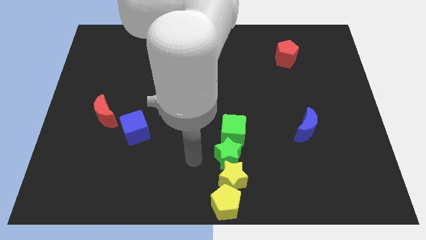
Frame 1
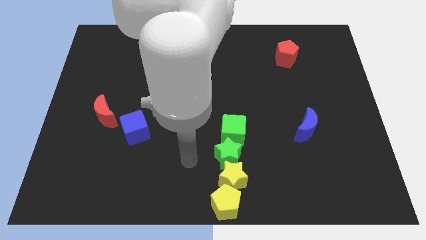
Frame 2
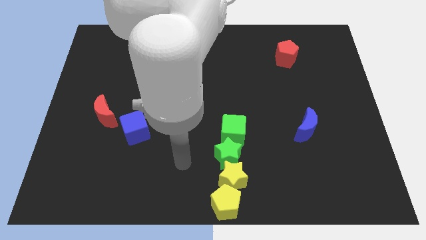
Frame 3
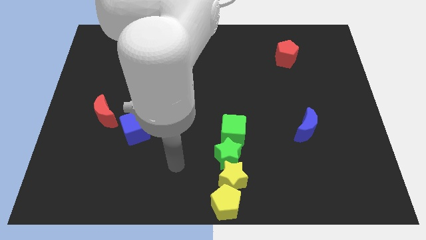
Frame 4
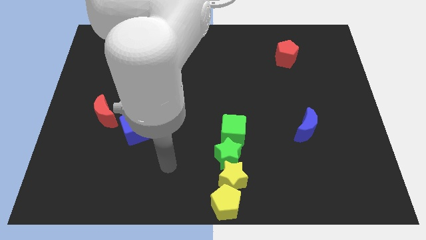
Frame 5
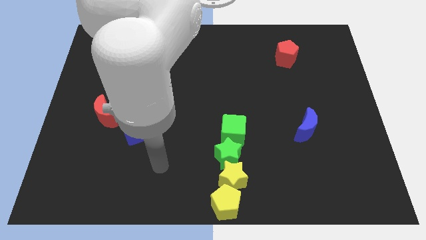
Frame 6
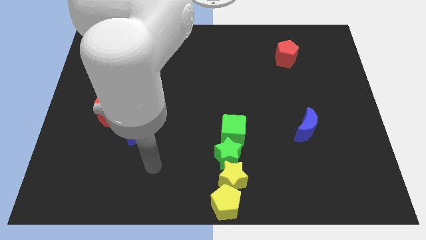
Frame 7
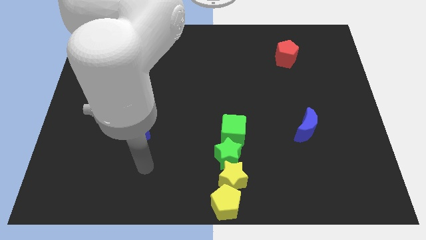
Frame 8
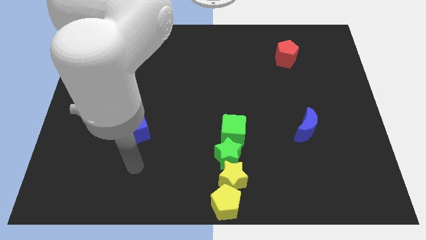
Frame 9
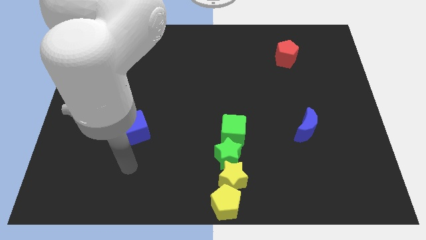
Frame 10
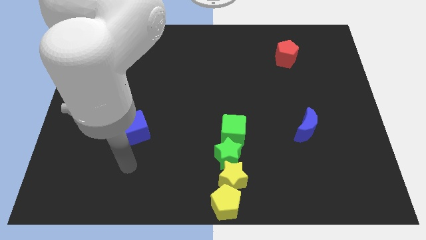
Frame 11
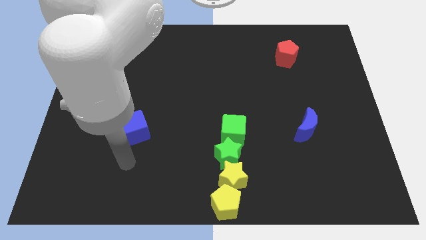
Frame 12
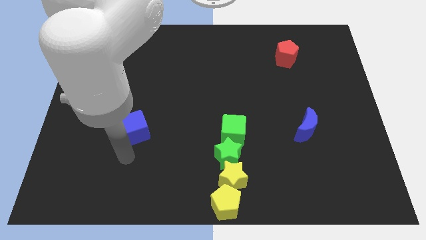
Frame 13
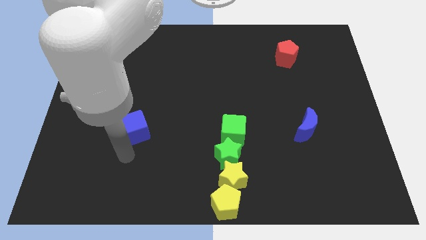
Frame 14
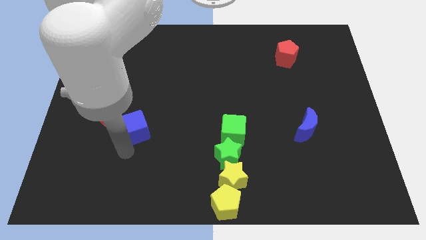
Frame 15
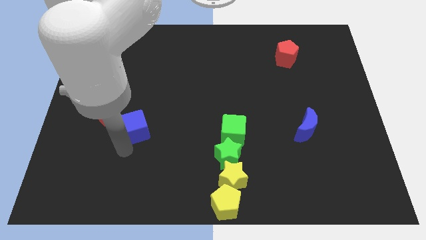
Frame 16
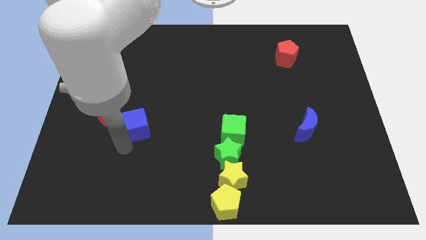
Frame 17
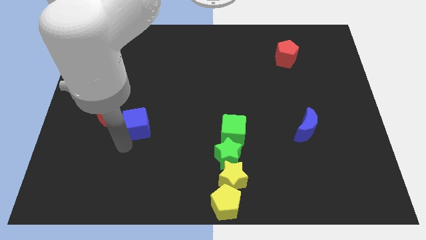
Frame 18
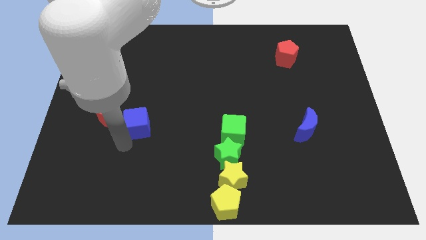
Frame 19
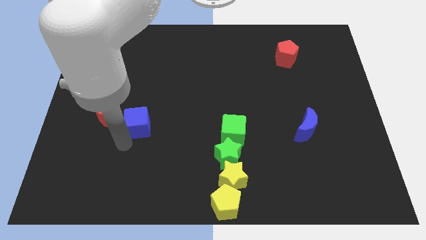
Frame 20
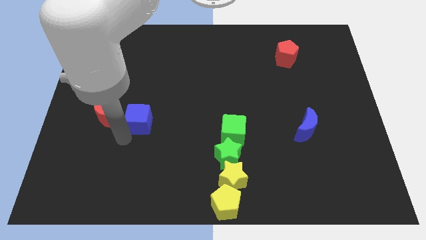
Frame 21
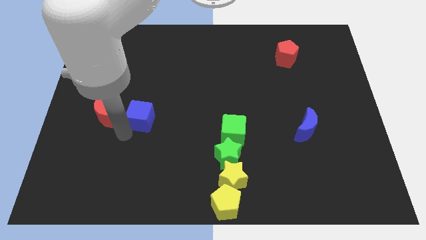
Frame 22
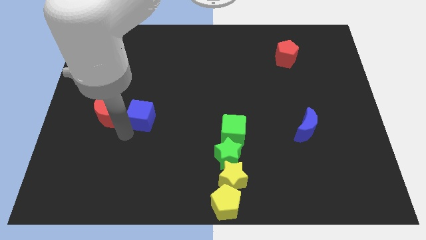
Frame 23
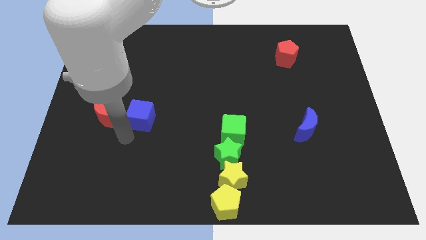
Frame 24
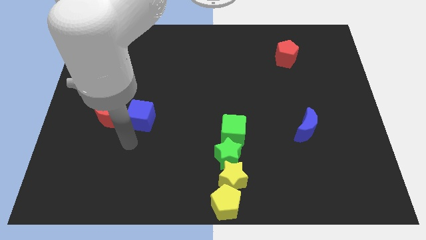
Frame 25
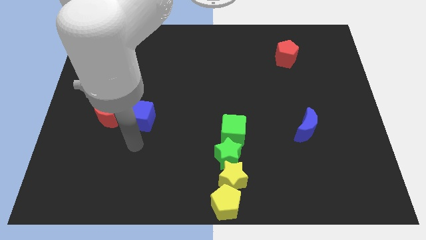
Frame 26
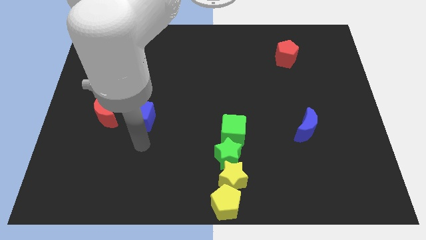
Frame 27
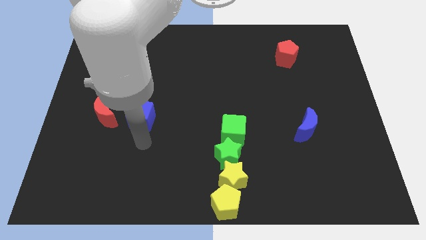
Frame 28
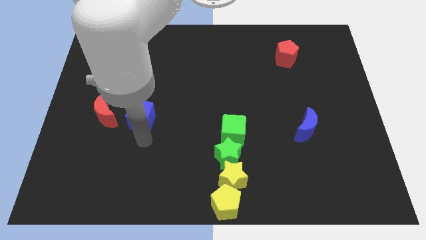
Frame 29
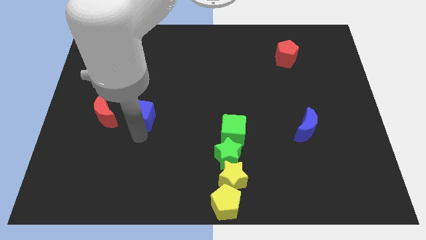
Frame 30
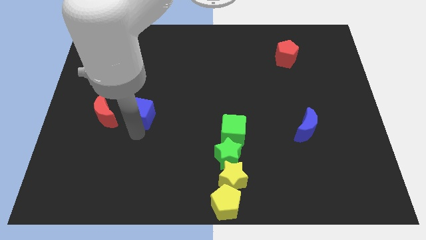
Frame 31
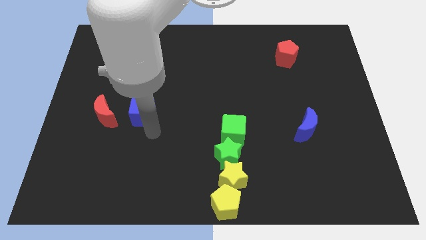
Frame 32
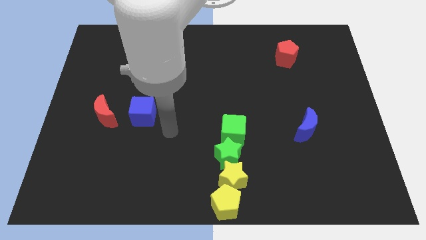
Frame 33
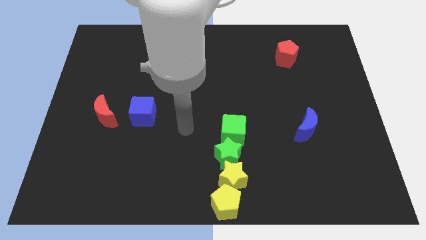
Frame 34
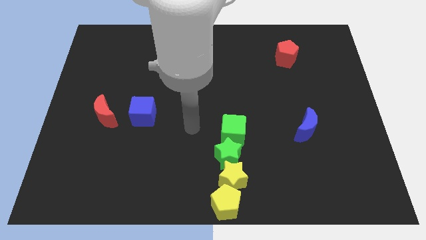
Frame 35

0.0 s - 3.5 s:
move the blue cube horizontally at the right side of the red crescent

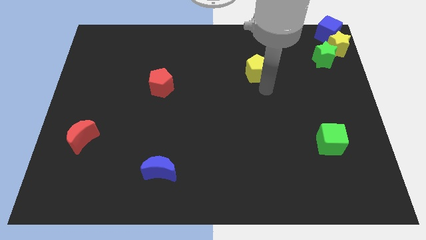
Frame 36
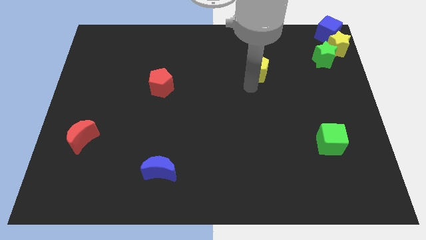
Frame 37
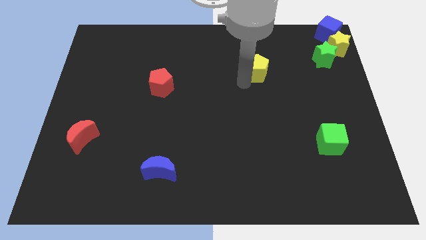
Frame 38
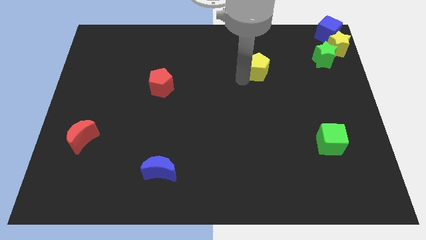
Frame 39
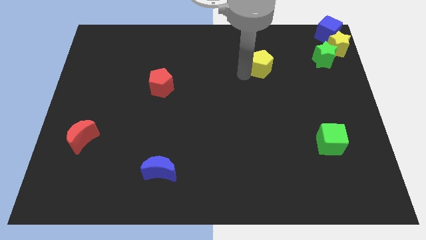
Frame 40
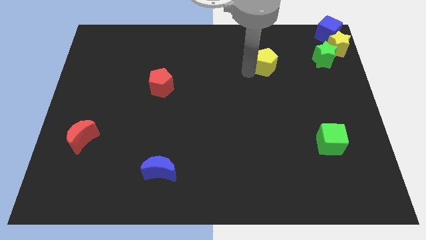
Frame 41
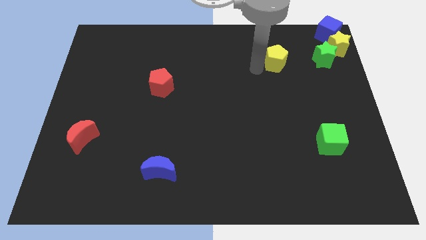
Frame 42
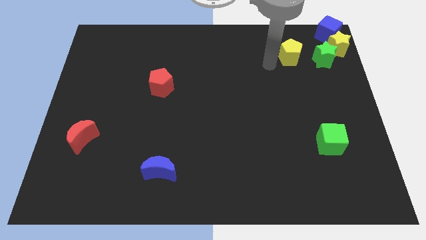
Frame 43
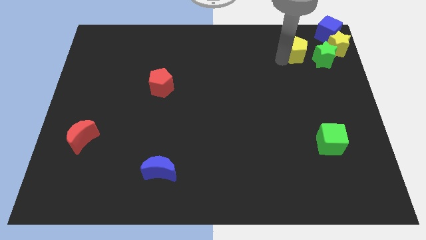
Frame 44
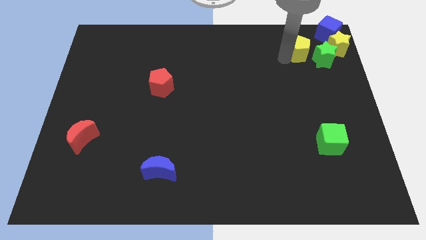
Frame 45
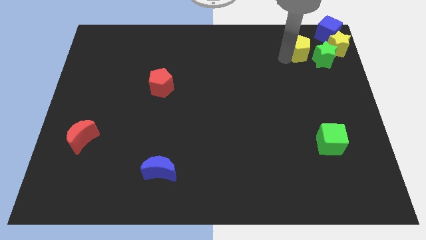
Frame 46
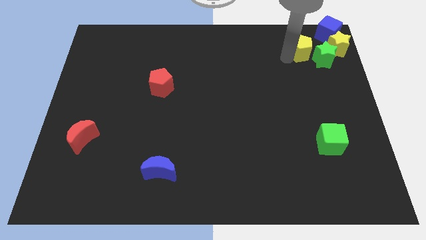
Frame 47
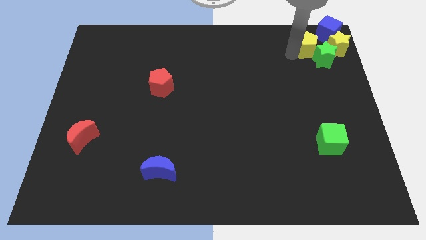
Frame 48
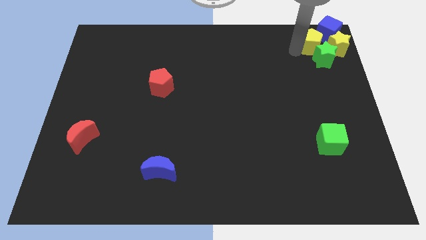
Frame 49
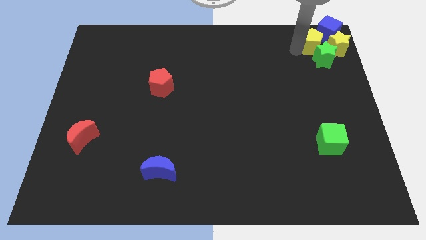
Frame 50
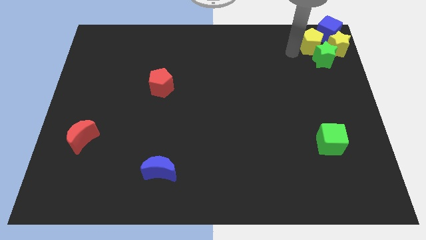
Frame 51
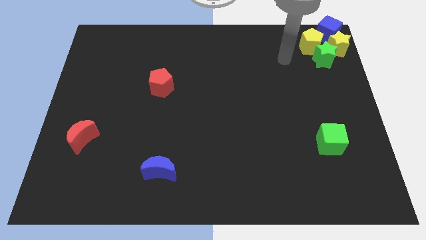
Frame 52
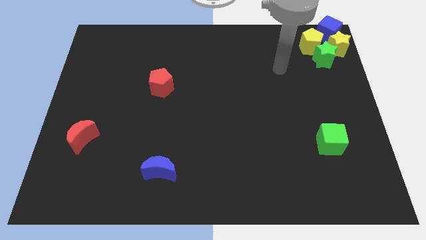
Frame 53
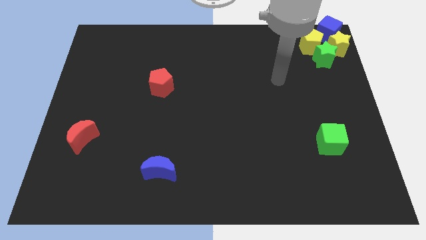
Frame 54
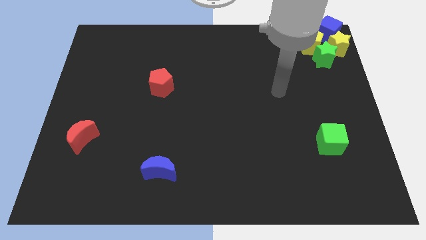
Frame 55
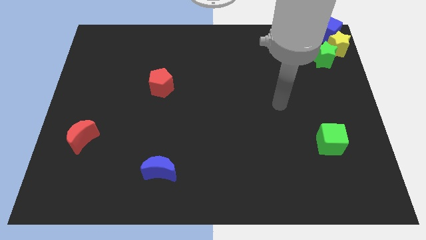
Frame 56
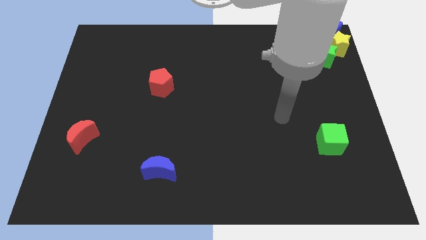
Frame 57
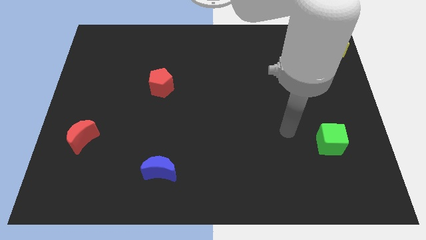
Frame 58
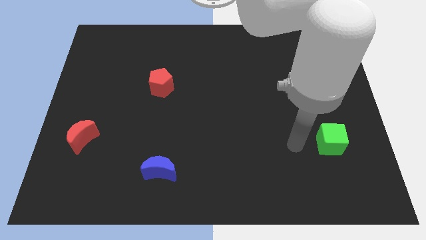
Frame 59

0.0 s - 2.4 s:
move the yellow pentagon close to the blue cube

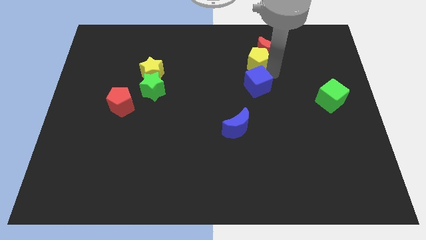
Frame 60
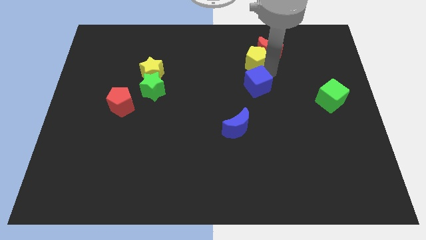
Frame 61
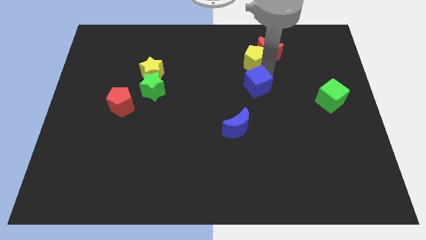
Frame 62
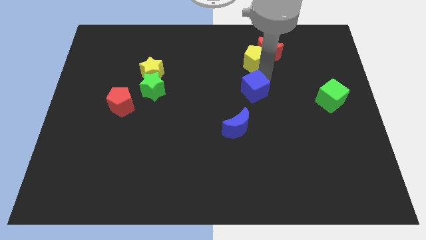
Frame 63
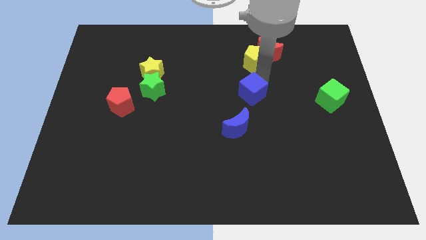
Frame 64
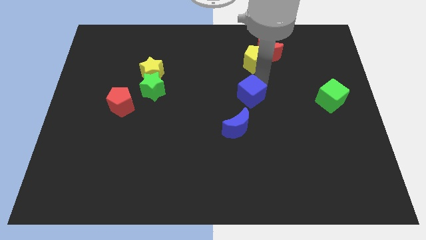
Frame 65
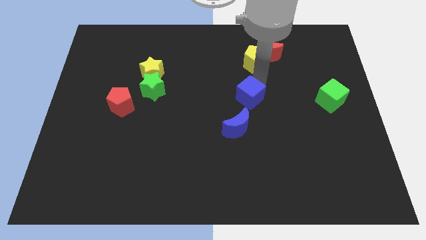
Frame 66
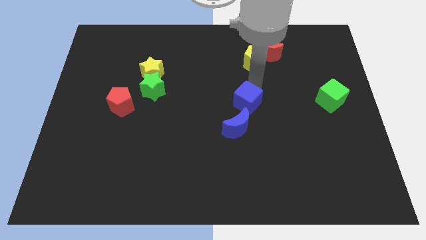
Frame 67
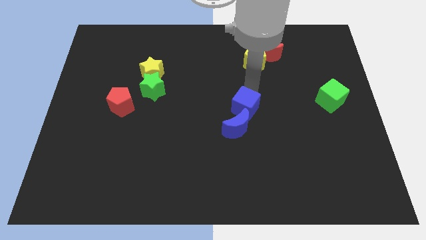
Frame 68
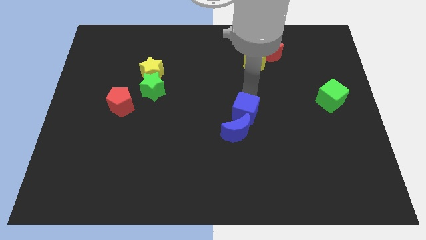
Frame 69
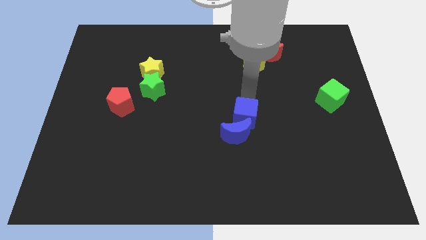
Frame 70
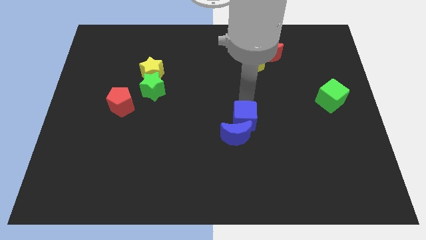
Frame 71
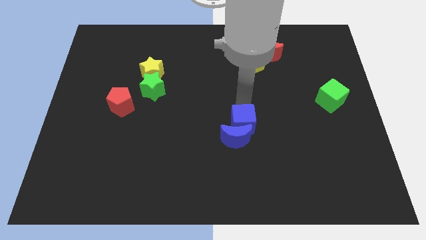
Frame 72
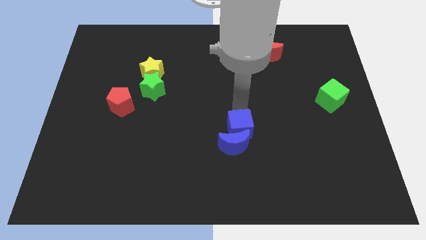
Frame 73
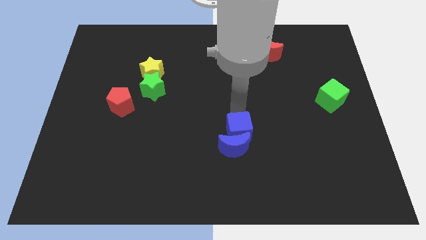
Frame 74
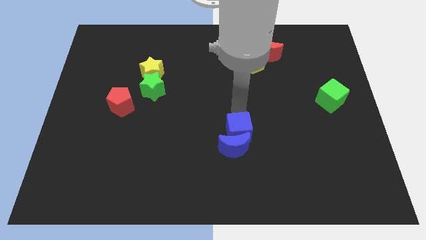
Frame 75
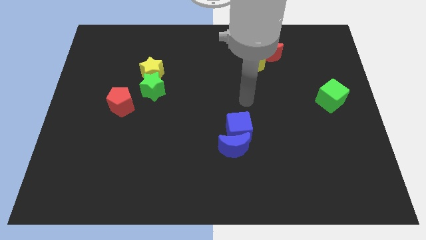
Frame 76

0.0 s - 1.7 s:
put the blue cube and blue moon together

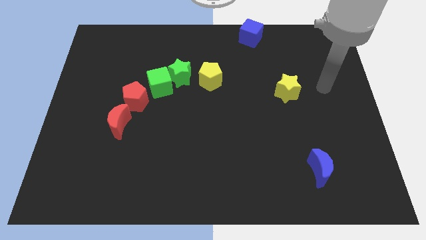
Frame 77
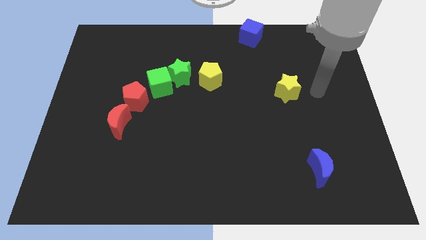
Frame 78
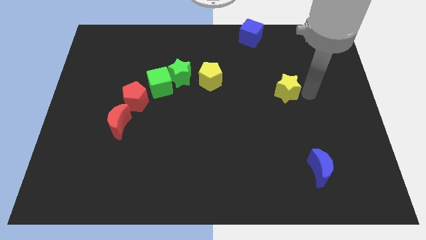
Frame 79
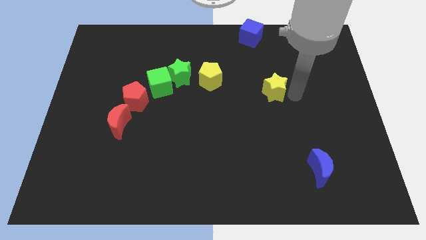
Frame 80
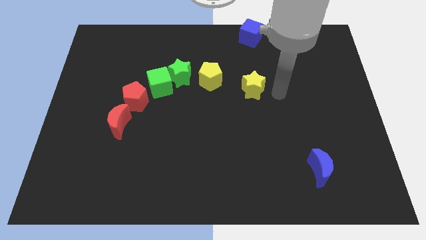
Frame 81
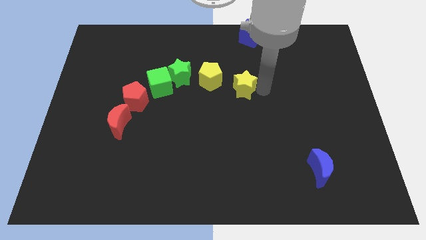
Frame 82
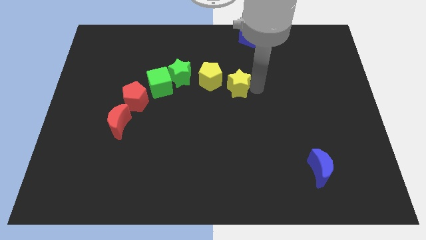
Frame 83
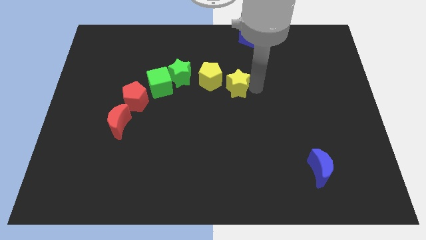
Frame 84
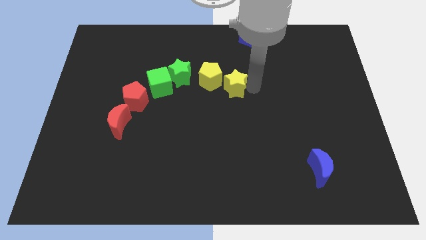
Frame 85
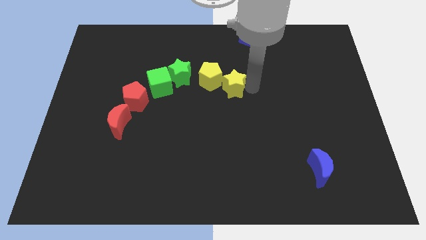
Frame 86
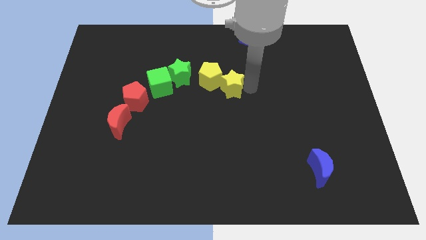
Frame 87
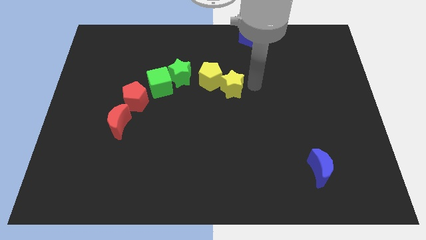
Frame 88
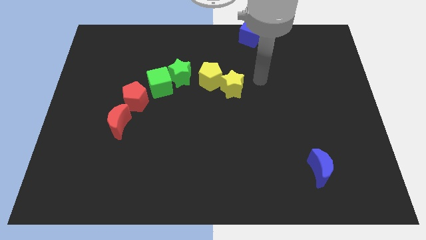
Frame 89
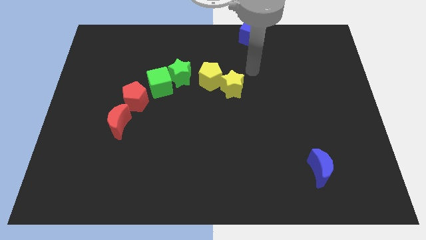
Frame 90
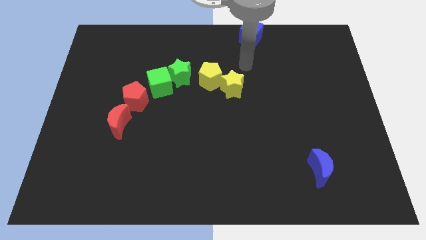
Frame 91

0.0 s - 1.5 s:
move the yellow star close to the right to the yellow pentagon
